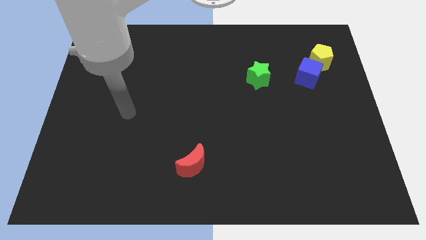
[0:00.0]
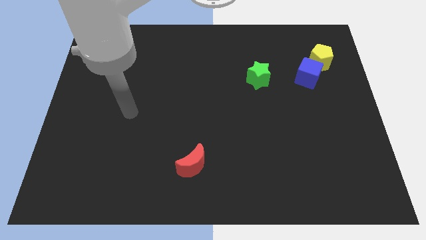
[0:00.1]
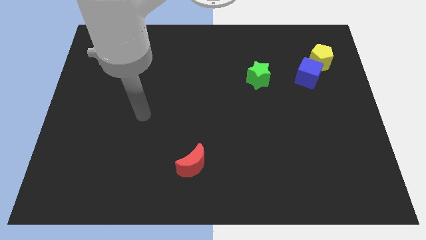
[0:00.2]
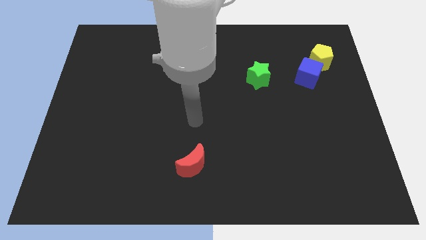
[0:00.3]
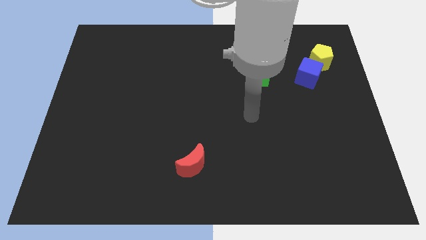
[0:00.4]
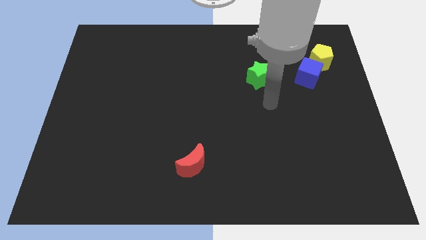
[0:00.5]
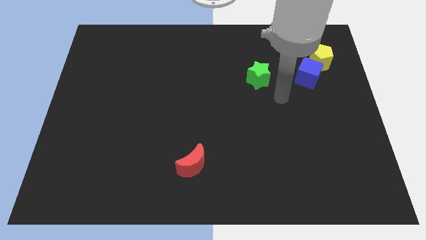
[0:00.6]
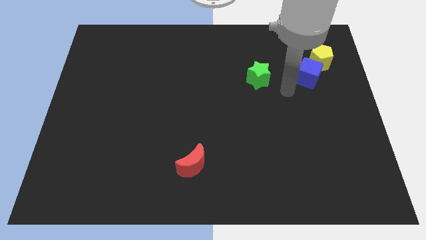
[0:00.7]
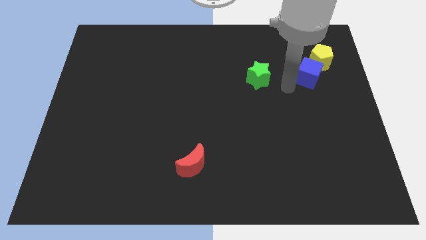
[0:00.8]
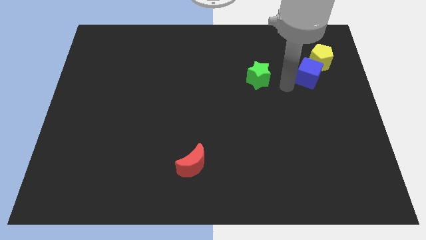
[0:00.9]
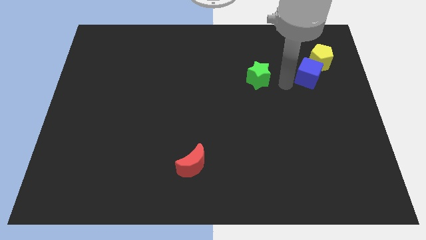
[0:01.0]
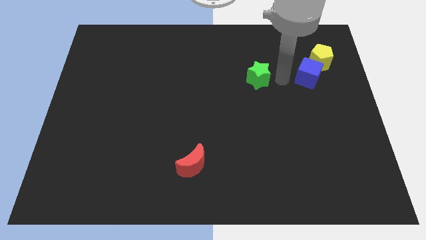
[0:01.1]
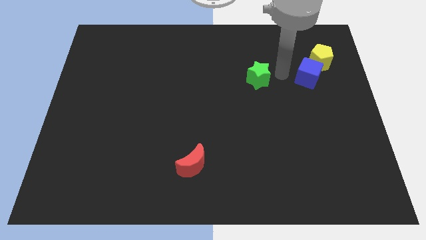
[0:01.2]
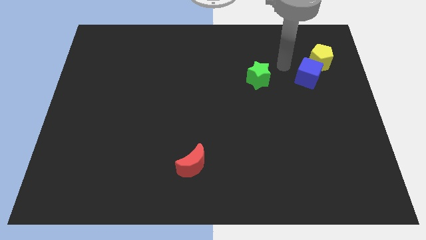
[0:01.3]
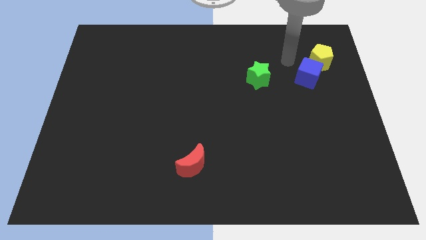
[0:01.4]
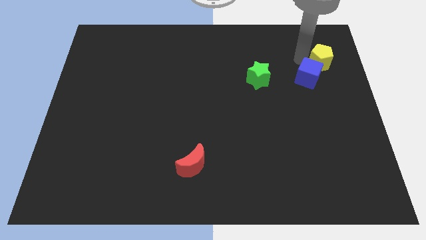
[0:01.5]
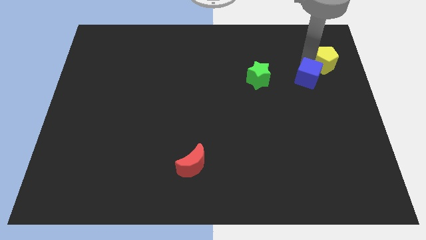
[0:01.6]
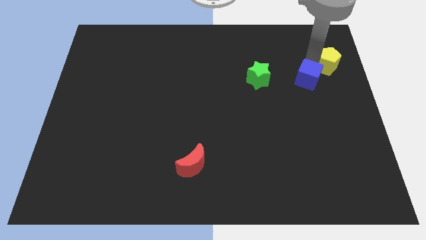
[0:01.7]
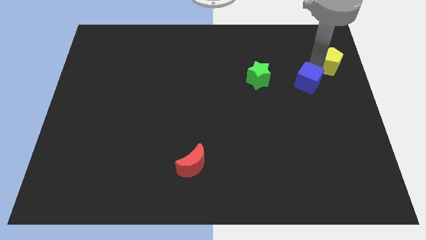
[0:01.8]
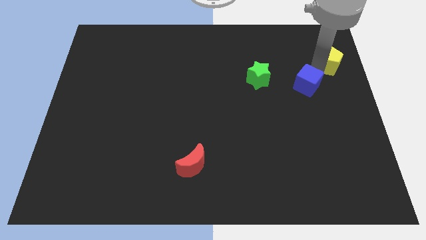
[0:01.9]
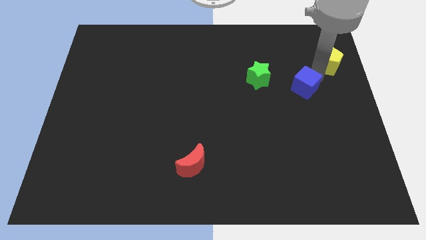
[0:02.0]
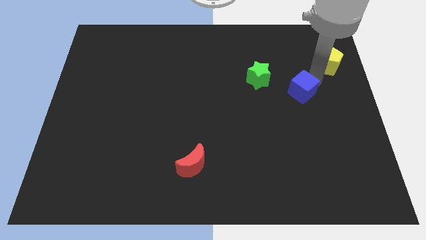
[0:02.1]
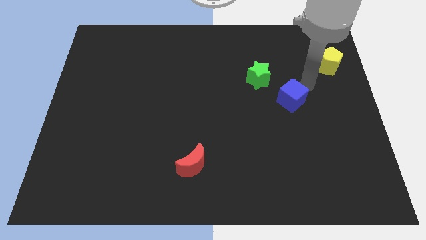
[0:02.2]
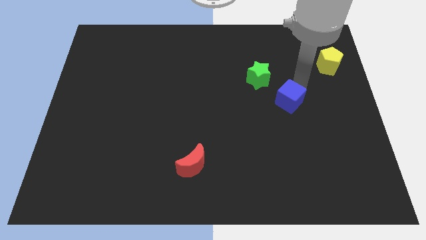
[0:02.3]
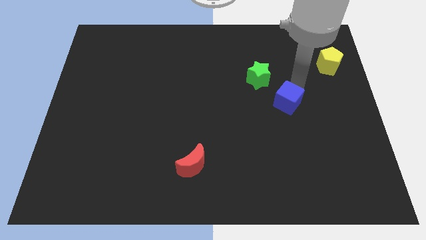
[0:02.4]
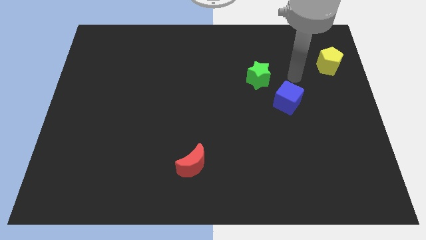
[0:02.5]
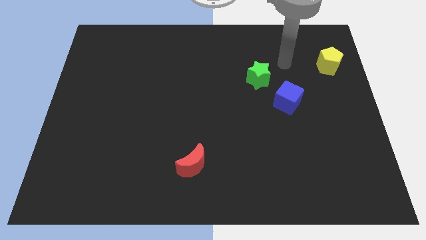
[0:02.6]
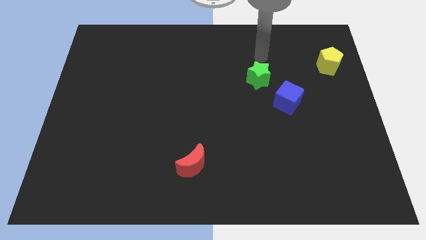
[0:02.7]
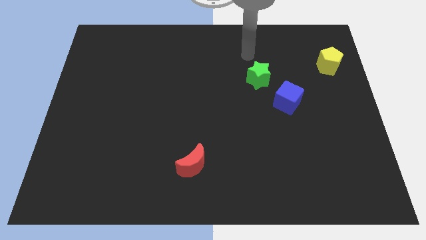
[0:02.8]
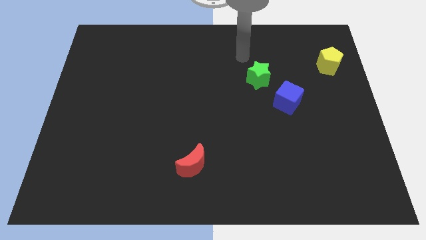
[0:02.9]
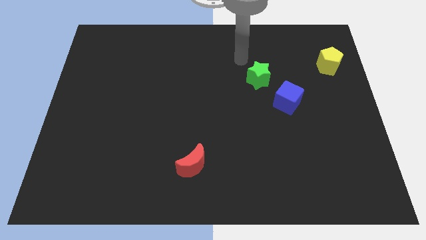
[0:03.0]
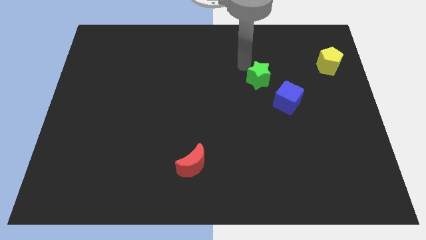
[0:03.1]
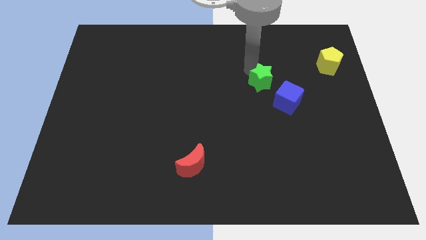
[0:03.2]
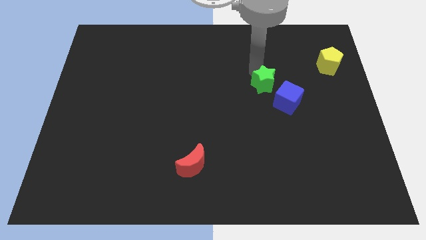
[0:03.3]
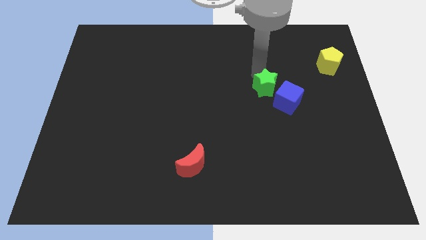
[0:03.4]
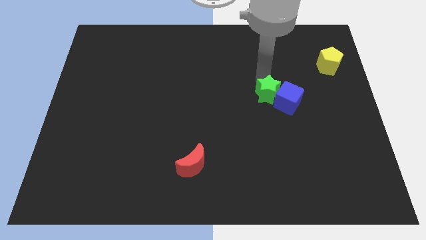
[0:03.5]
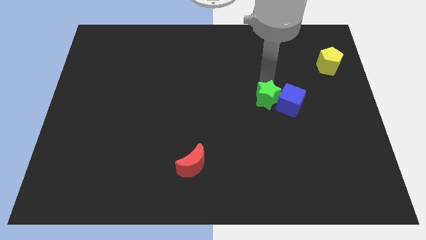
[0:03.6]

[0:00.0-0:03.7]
push the star close to the blue cube

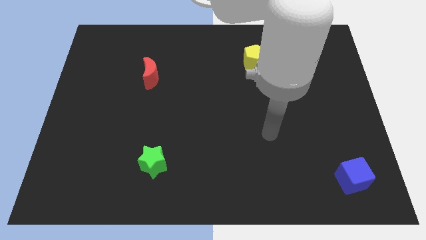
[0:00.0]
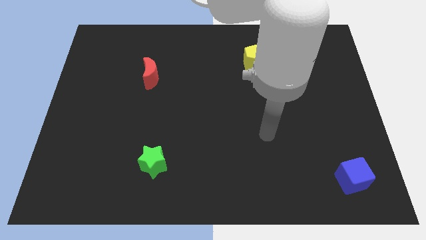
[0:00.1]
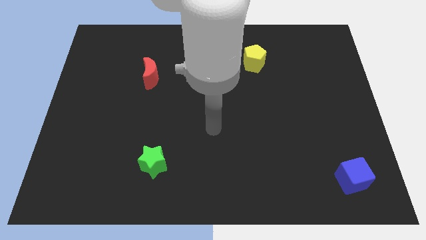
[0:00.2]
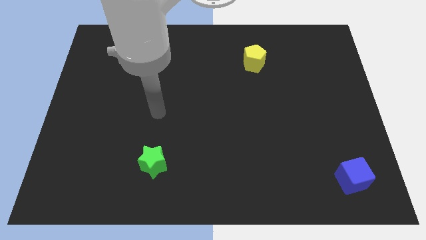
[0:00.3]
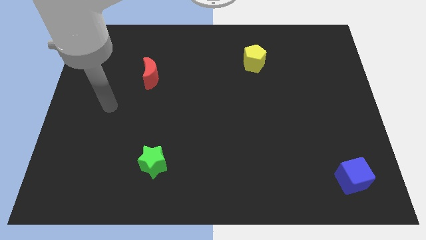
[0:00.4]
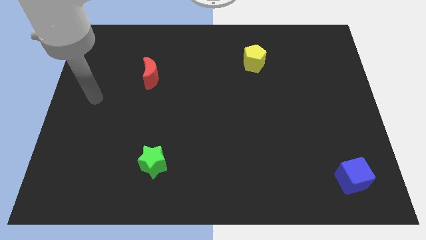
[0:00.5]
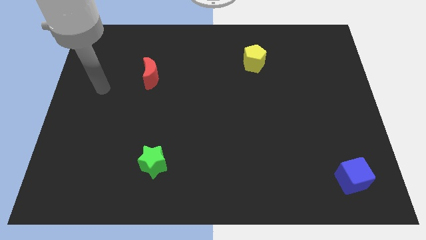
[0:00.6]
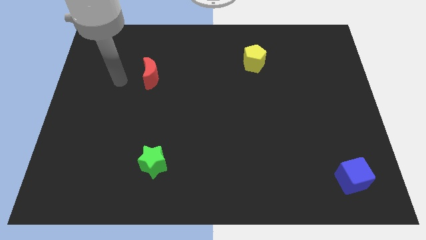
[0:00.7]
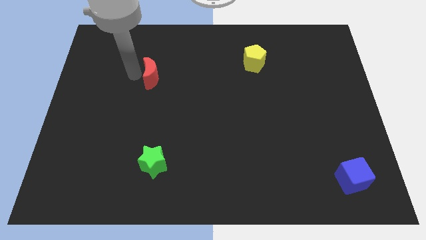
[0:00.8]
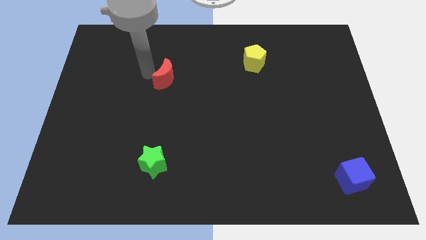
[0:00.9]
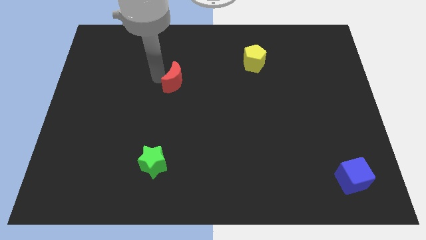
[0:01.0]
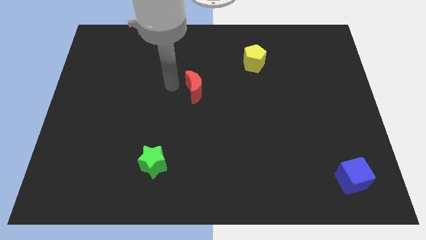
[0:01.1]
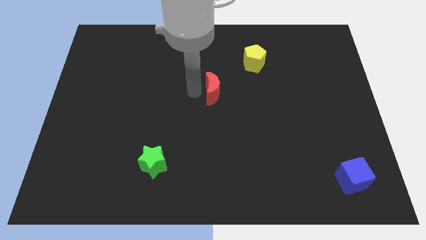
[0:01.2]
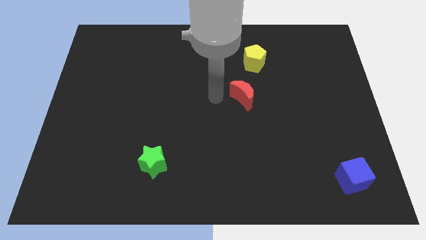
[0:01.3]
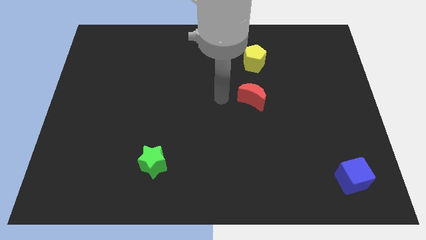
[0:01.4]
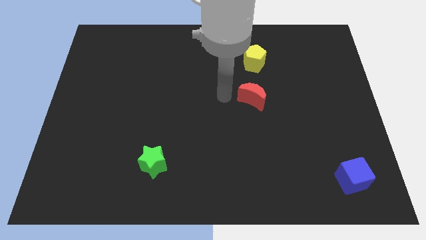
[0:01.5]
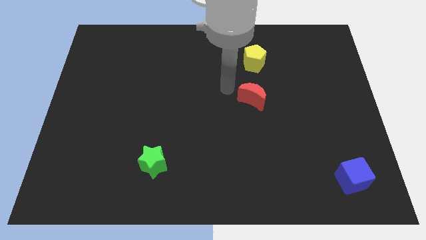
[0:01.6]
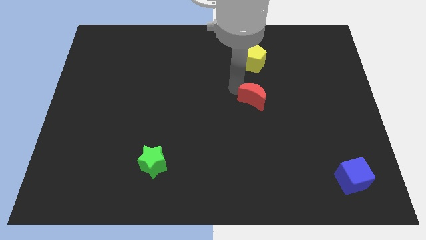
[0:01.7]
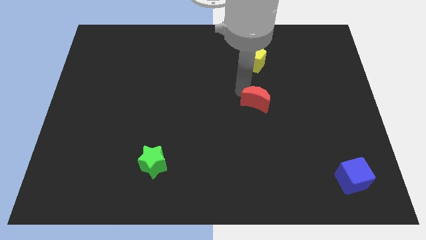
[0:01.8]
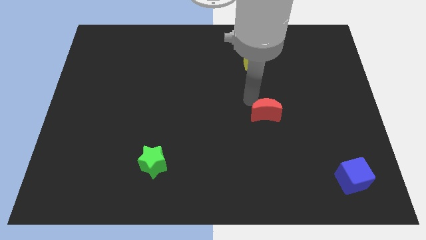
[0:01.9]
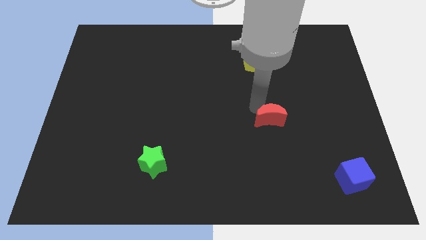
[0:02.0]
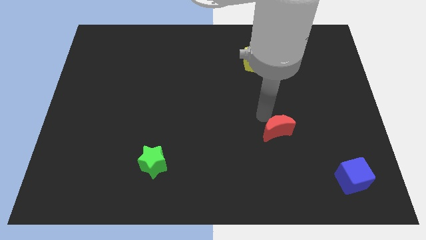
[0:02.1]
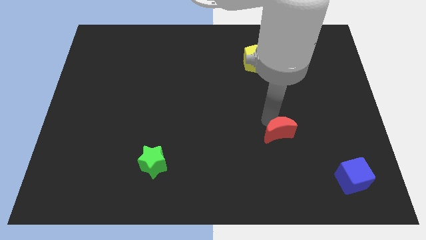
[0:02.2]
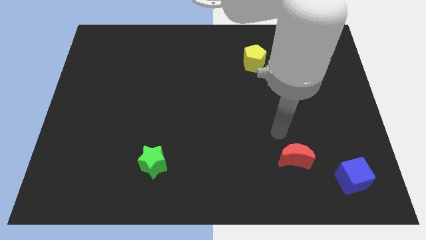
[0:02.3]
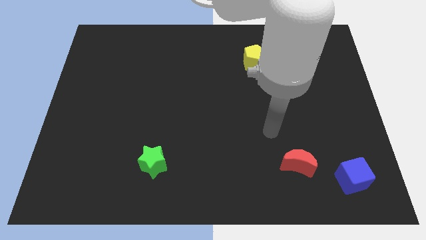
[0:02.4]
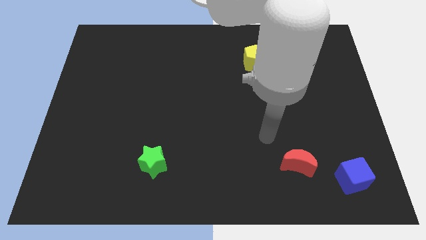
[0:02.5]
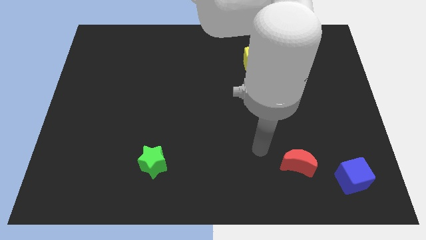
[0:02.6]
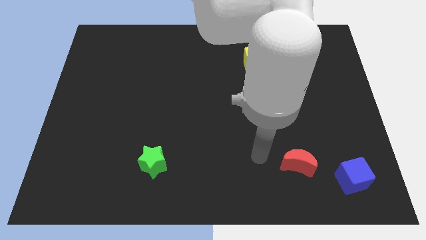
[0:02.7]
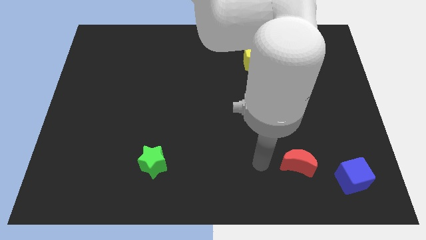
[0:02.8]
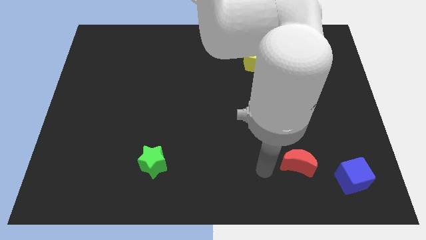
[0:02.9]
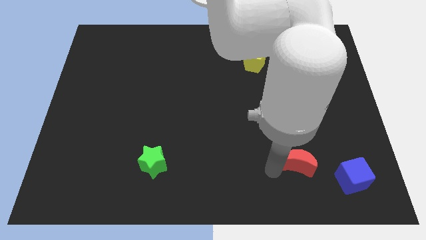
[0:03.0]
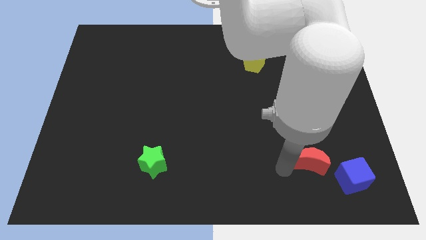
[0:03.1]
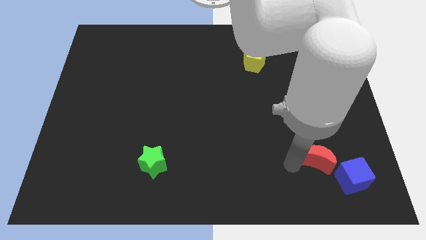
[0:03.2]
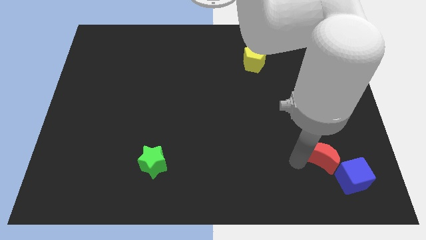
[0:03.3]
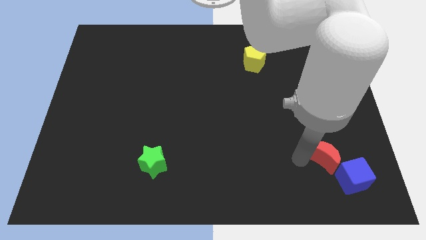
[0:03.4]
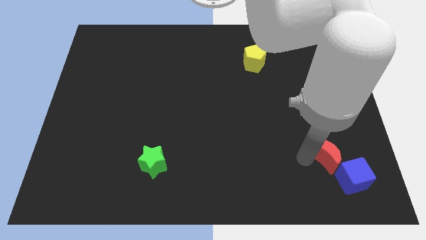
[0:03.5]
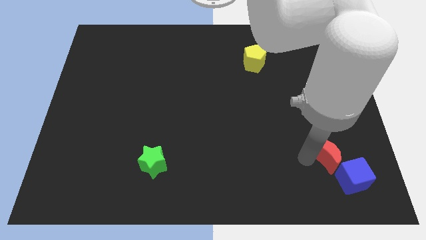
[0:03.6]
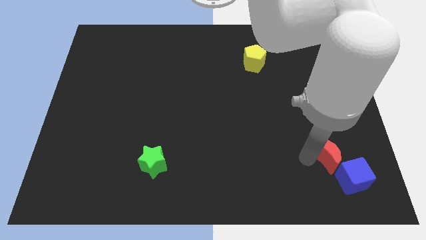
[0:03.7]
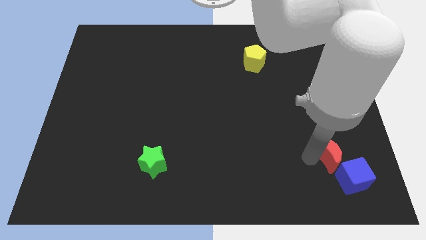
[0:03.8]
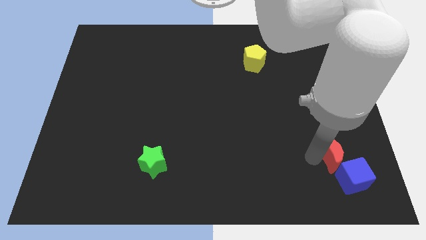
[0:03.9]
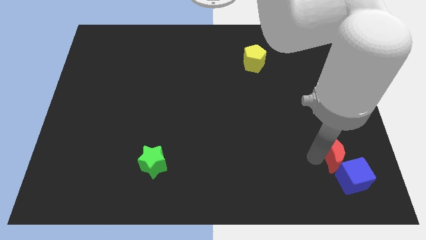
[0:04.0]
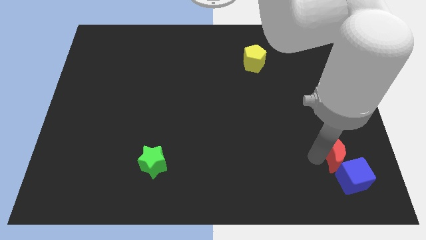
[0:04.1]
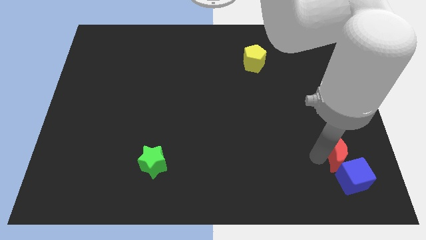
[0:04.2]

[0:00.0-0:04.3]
put the moon towards the blue block

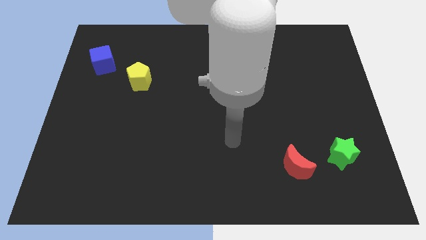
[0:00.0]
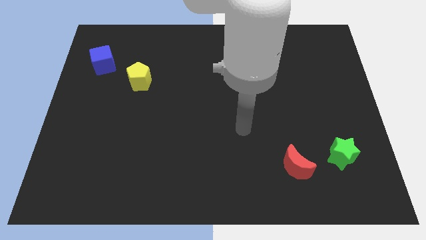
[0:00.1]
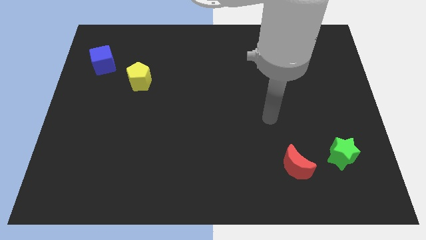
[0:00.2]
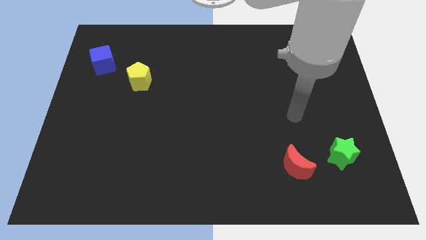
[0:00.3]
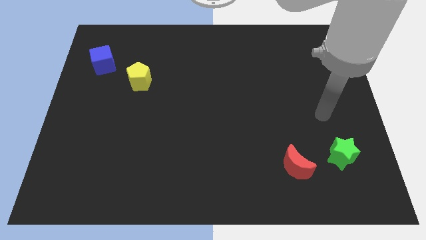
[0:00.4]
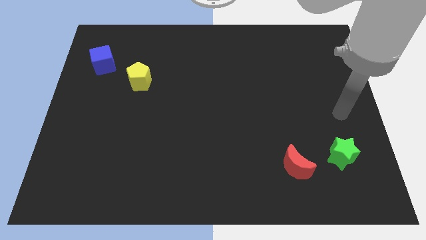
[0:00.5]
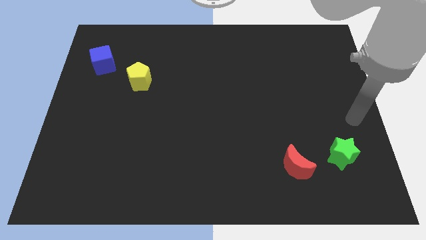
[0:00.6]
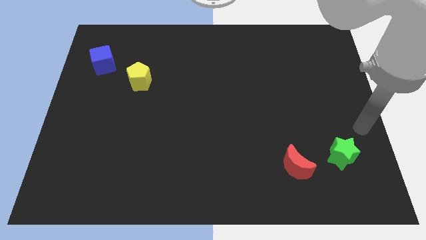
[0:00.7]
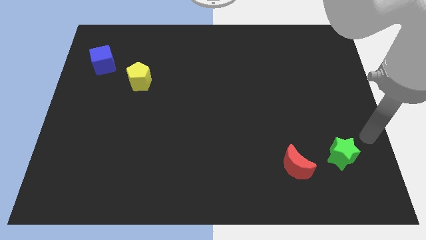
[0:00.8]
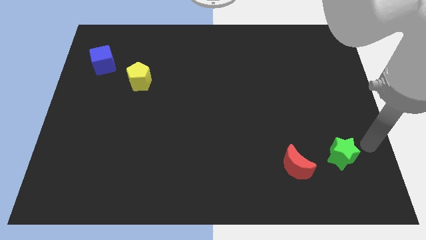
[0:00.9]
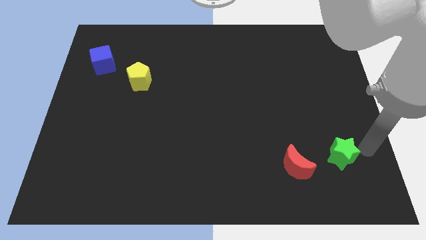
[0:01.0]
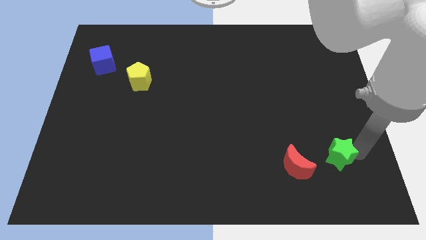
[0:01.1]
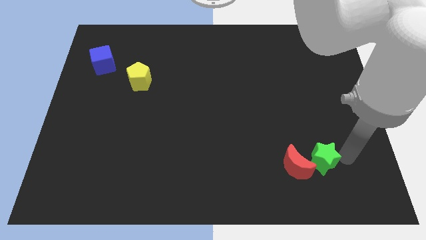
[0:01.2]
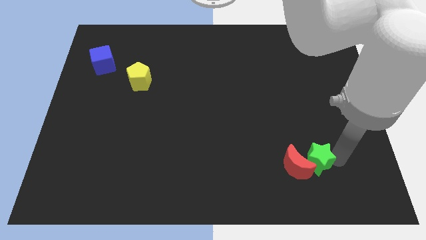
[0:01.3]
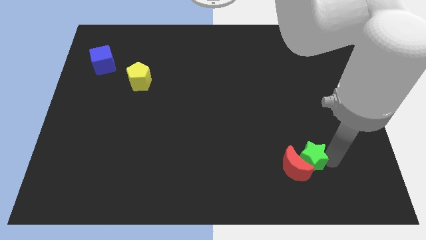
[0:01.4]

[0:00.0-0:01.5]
slide the green block to the red block
